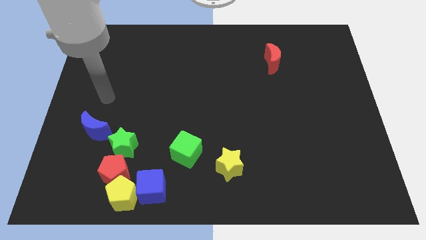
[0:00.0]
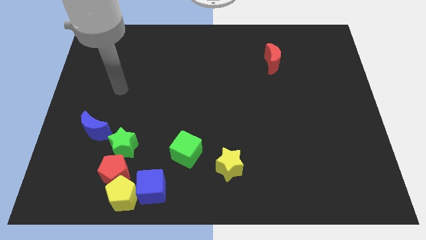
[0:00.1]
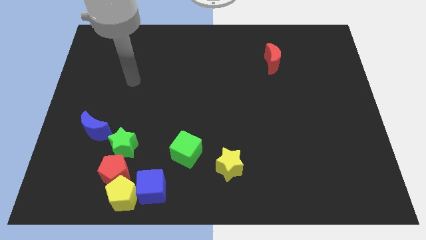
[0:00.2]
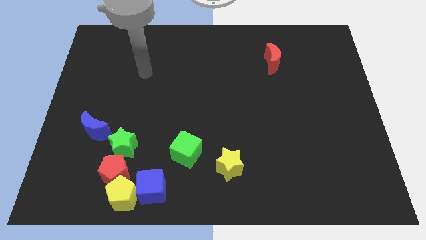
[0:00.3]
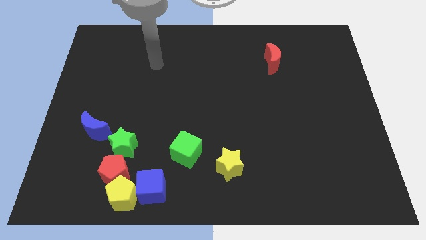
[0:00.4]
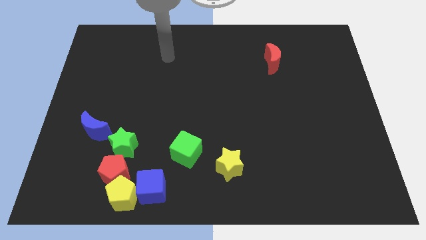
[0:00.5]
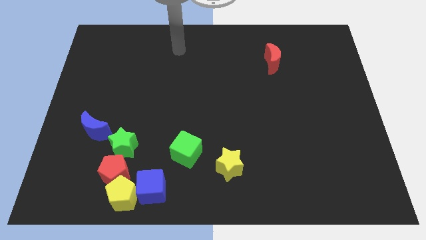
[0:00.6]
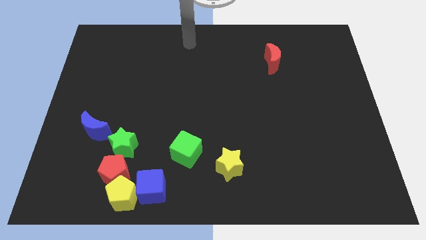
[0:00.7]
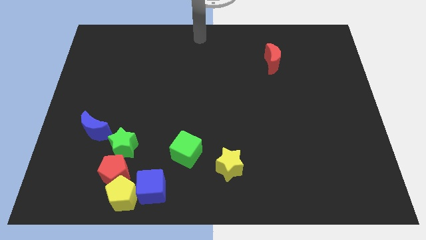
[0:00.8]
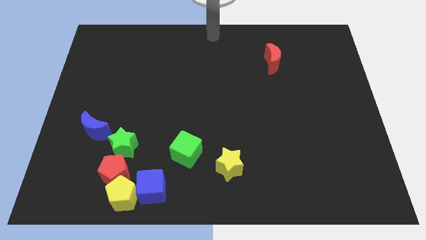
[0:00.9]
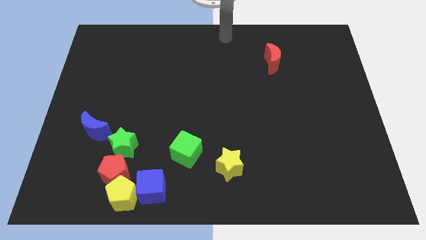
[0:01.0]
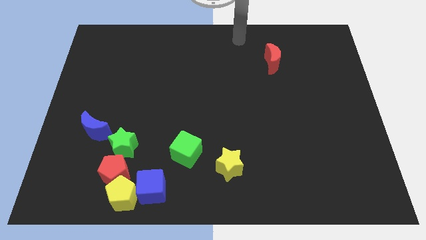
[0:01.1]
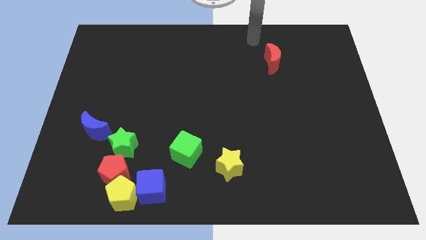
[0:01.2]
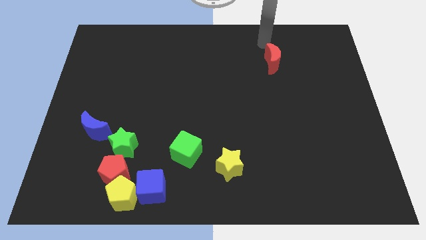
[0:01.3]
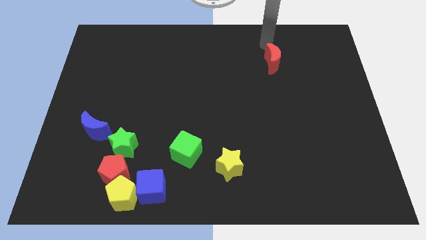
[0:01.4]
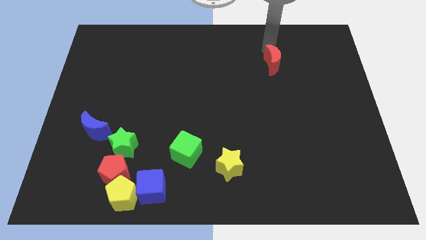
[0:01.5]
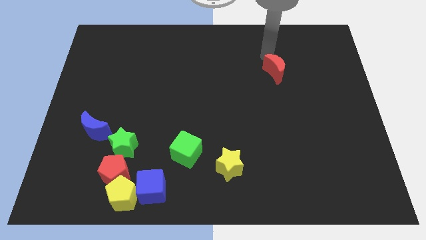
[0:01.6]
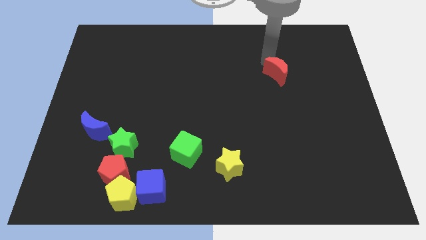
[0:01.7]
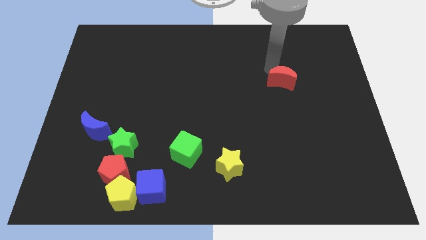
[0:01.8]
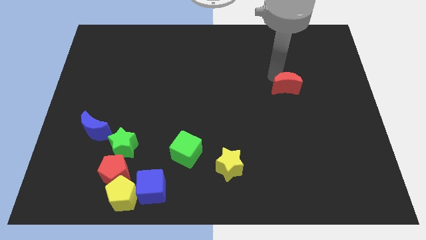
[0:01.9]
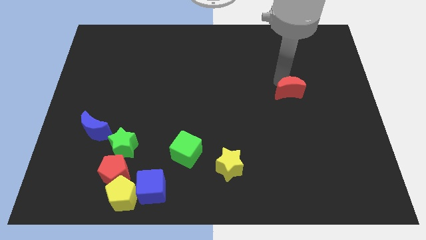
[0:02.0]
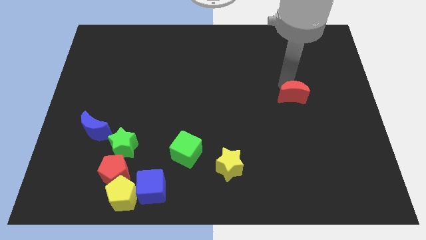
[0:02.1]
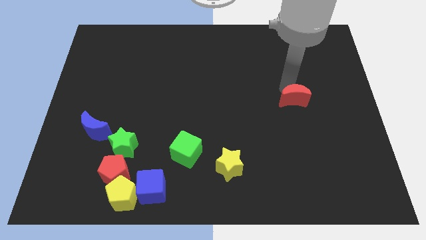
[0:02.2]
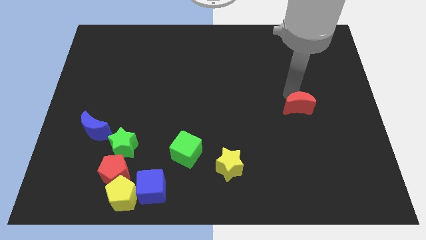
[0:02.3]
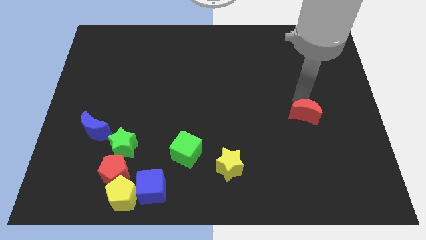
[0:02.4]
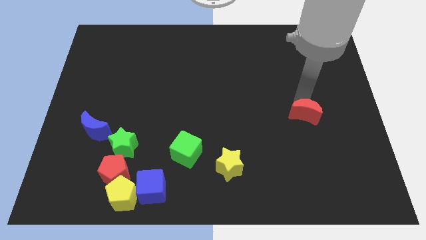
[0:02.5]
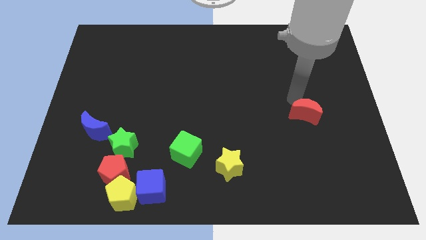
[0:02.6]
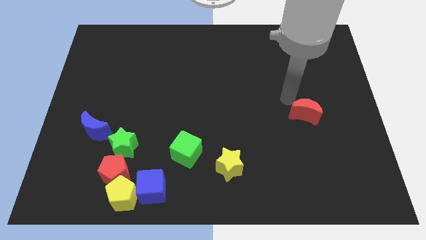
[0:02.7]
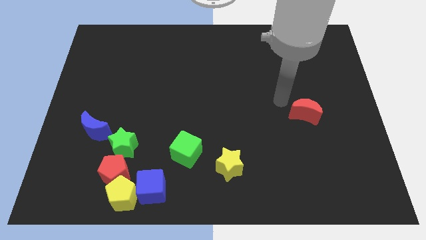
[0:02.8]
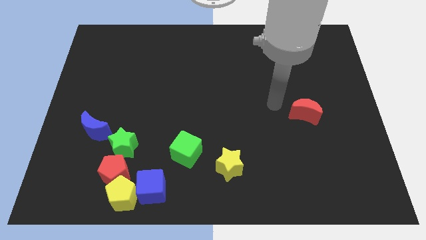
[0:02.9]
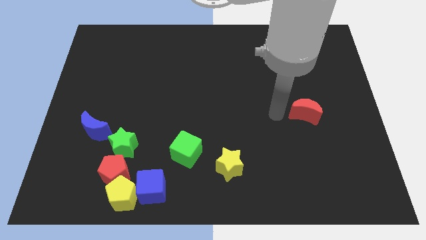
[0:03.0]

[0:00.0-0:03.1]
slide red moon down to the top right of yellow star

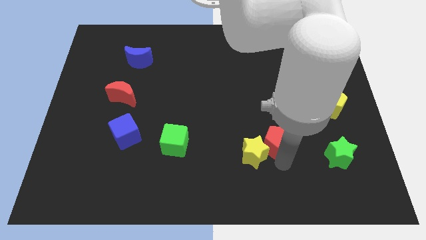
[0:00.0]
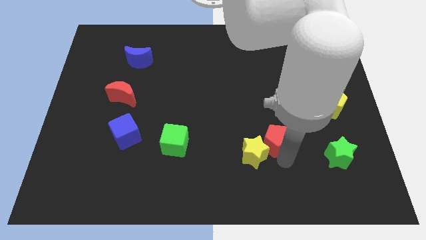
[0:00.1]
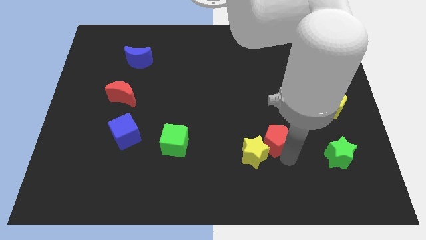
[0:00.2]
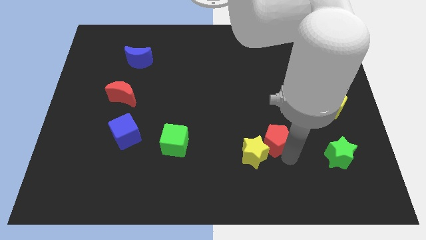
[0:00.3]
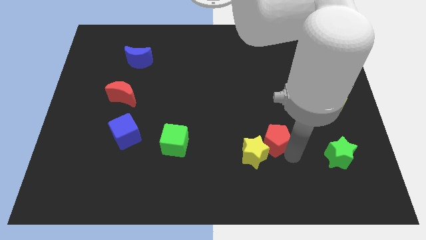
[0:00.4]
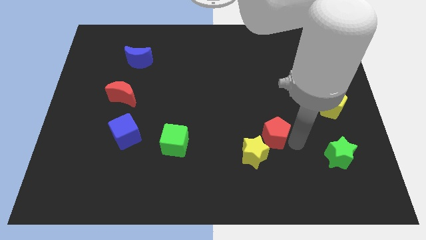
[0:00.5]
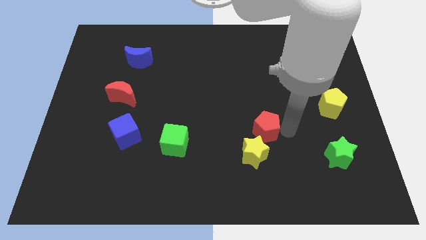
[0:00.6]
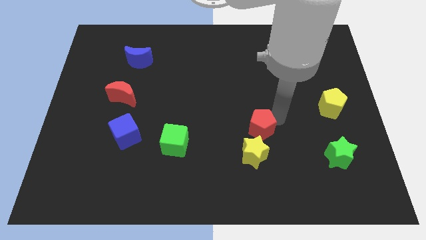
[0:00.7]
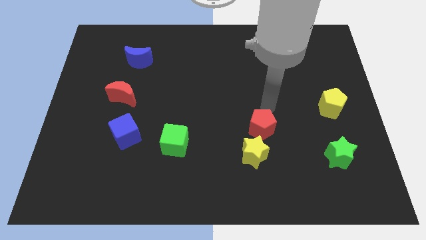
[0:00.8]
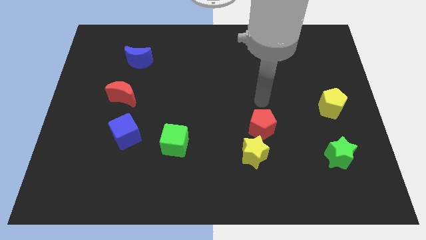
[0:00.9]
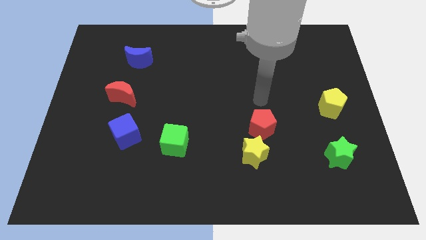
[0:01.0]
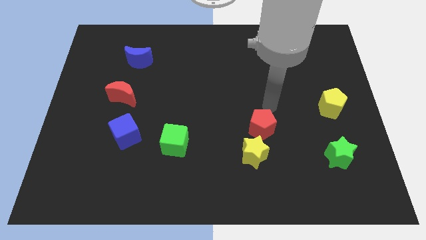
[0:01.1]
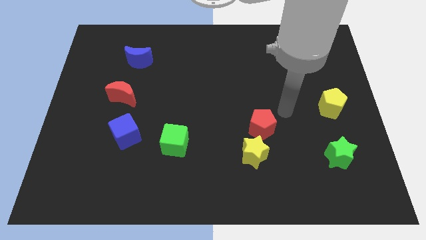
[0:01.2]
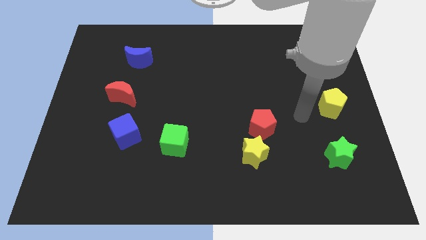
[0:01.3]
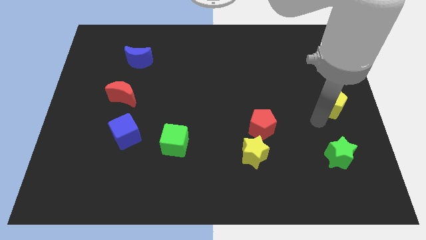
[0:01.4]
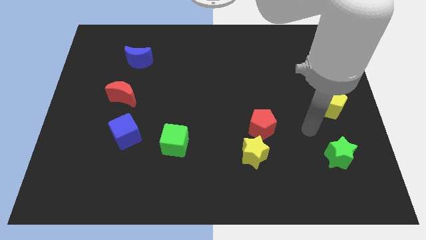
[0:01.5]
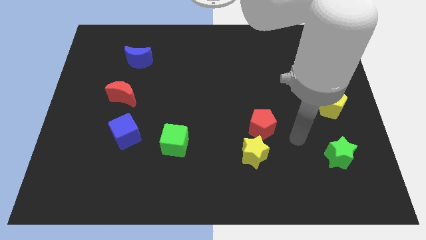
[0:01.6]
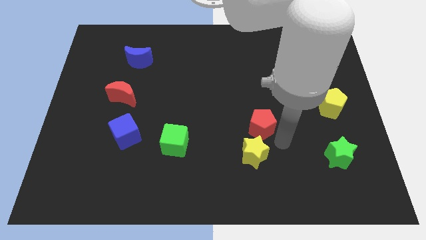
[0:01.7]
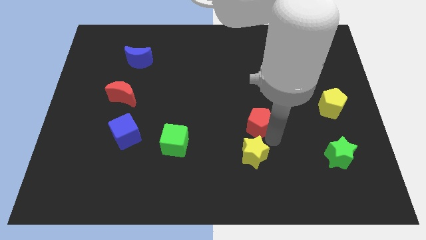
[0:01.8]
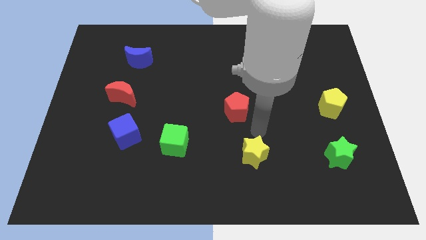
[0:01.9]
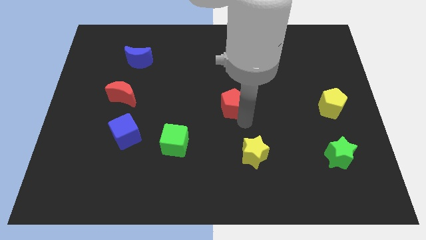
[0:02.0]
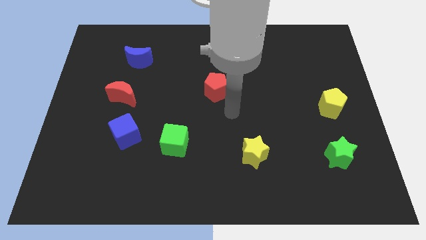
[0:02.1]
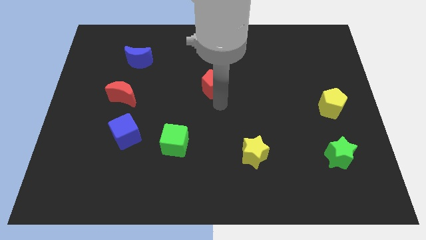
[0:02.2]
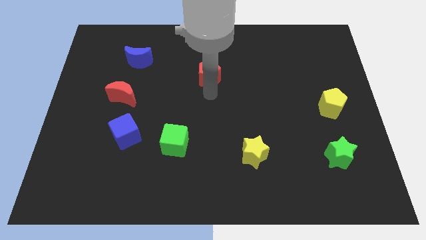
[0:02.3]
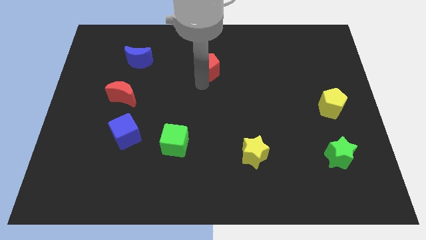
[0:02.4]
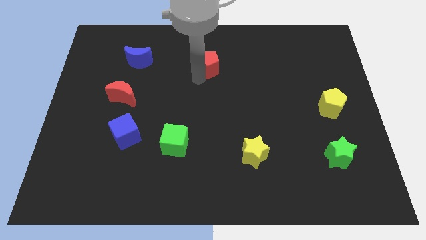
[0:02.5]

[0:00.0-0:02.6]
move the red pentagon diagonal to the blue cube

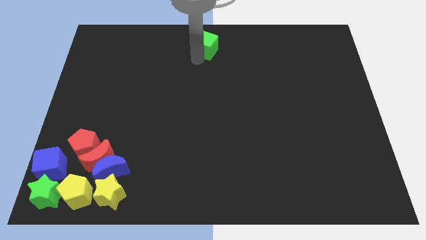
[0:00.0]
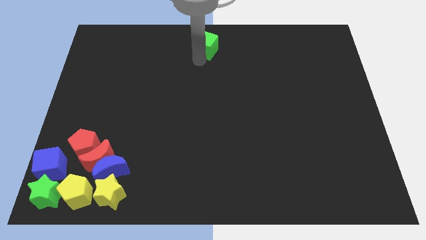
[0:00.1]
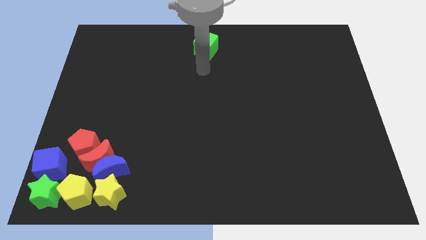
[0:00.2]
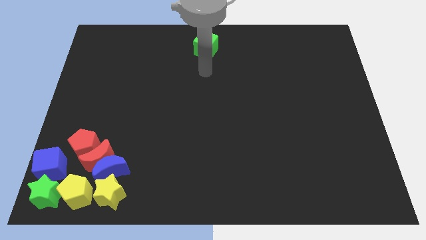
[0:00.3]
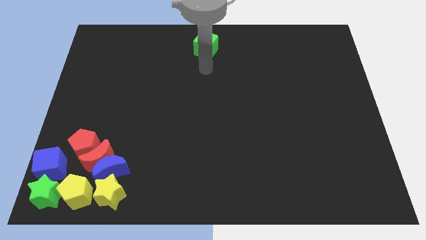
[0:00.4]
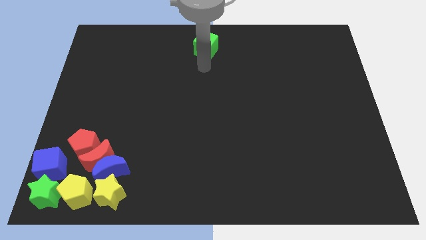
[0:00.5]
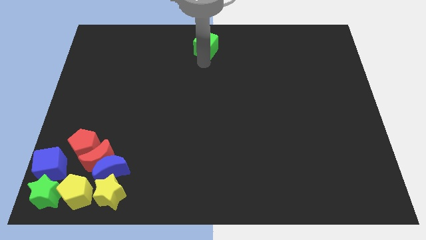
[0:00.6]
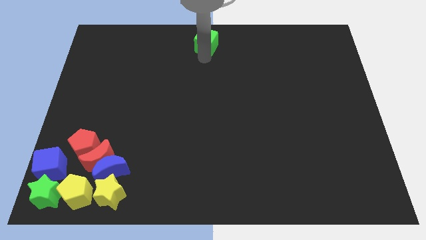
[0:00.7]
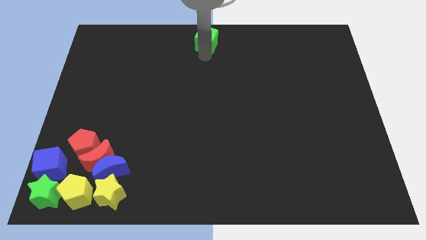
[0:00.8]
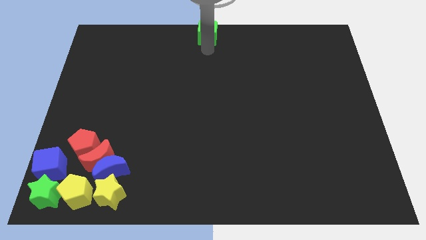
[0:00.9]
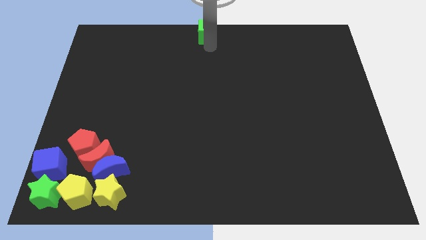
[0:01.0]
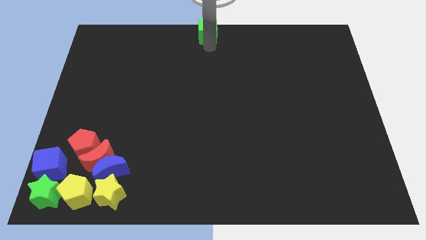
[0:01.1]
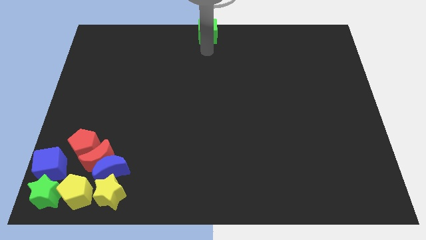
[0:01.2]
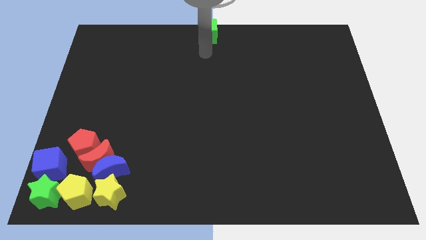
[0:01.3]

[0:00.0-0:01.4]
move the green cube to the top center of the board

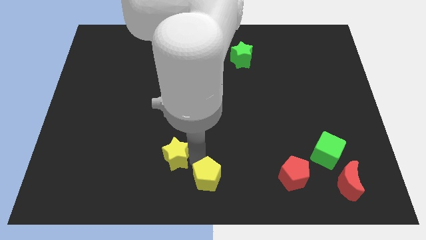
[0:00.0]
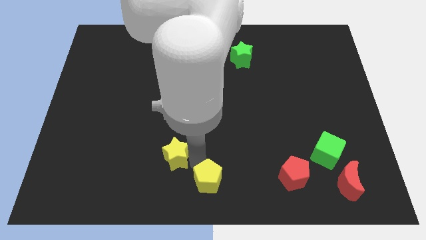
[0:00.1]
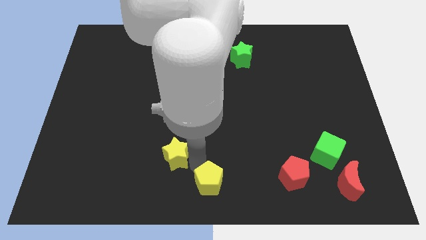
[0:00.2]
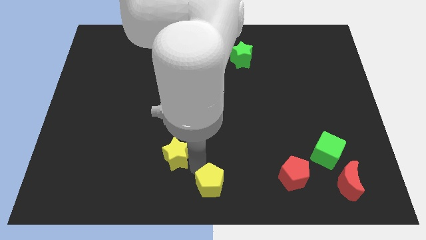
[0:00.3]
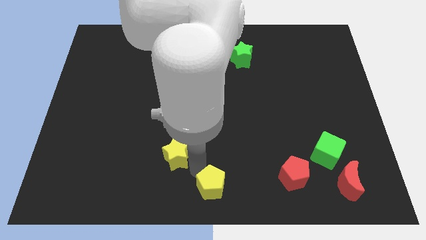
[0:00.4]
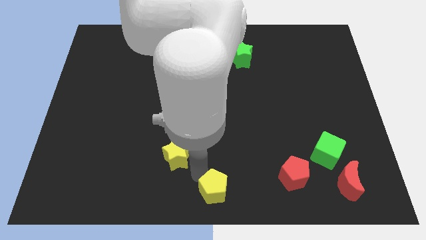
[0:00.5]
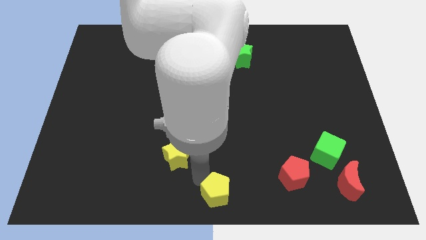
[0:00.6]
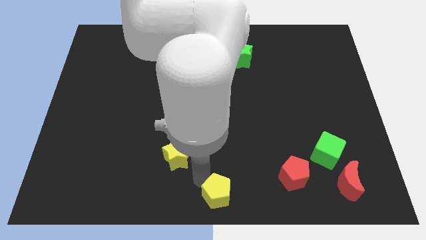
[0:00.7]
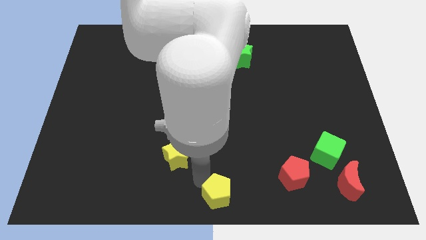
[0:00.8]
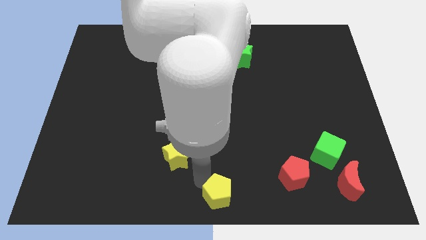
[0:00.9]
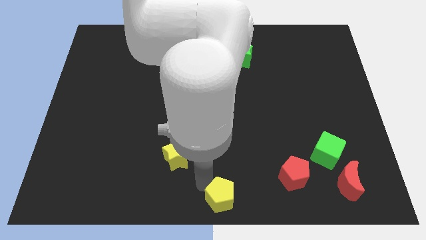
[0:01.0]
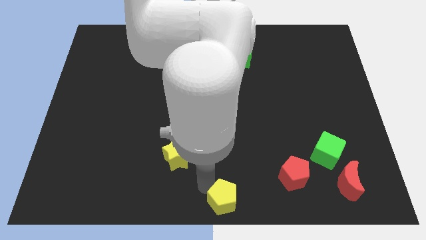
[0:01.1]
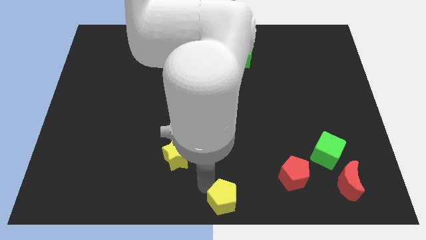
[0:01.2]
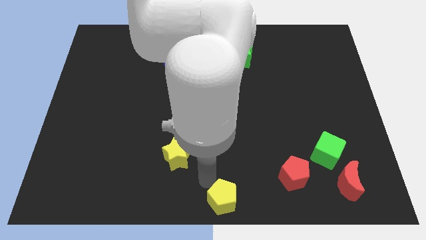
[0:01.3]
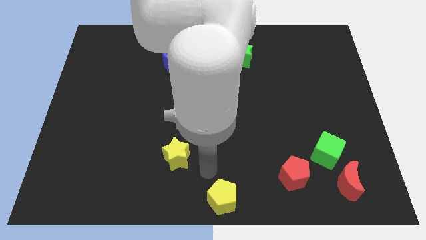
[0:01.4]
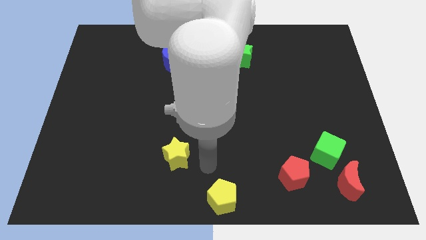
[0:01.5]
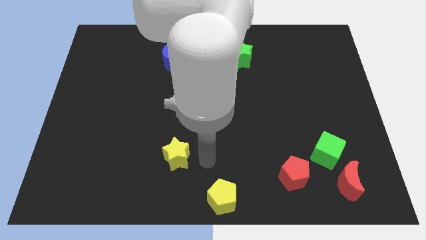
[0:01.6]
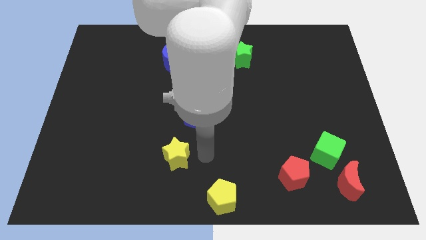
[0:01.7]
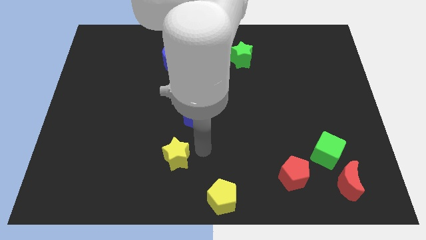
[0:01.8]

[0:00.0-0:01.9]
place the yellow pentagon at the bottom center
